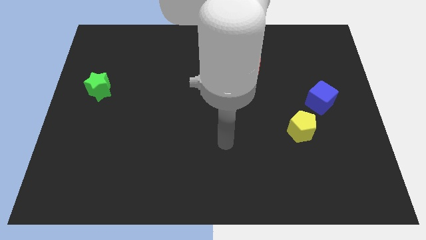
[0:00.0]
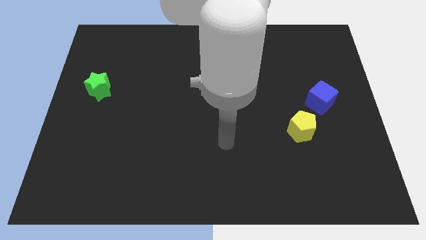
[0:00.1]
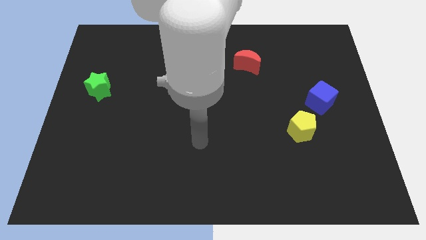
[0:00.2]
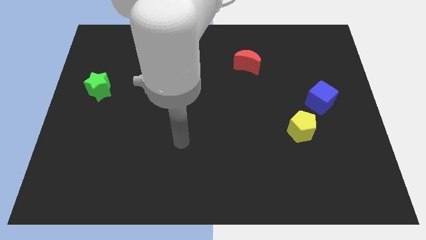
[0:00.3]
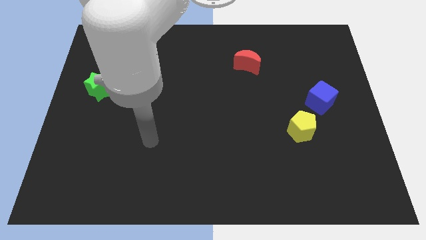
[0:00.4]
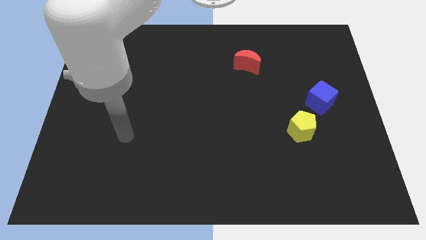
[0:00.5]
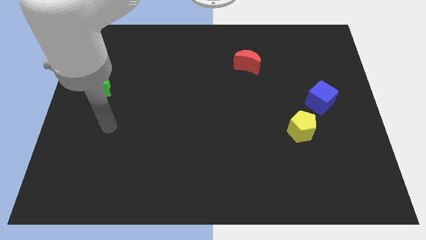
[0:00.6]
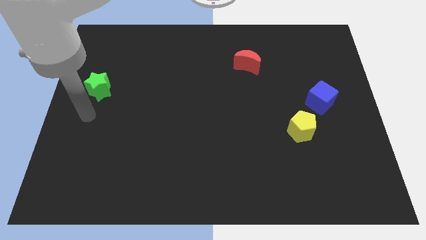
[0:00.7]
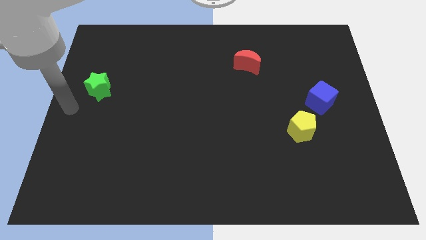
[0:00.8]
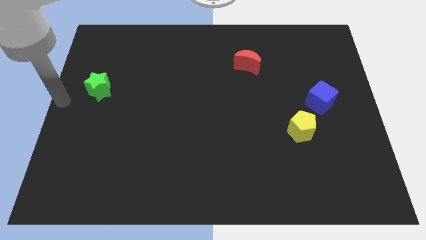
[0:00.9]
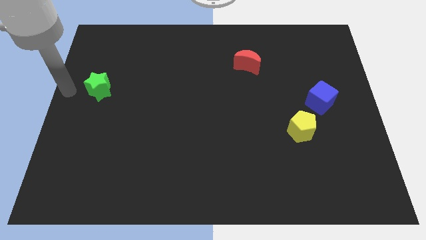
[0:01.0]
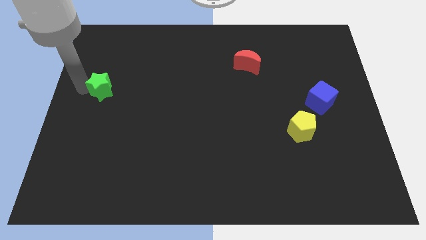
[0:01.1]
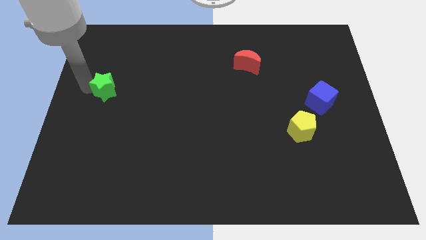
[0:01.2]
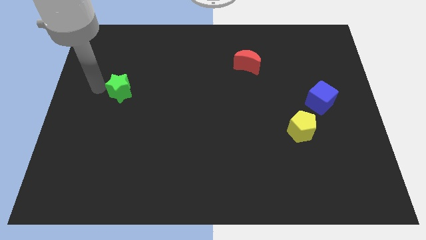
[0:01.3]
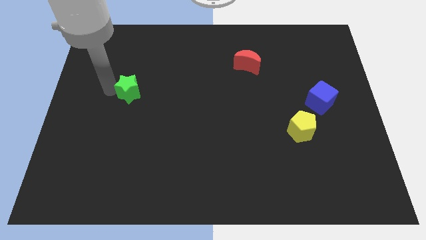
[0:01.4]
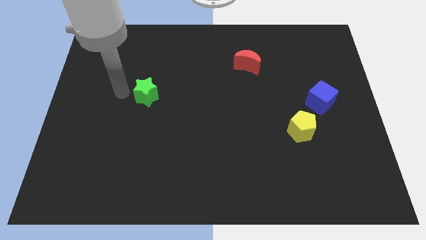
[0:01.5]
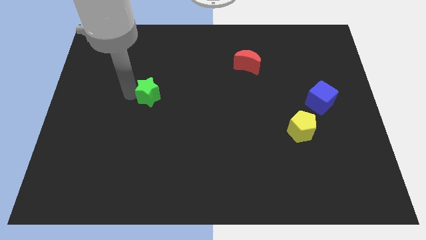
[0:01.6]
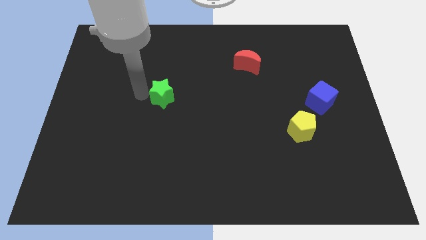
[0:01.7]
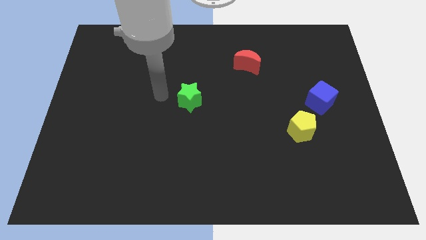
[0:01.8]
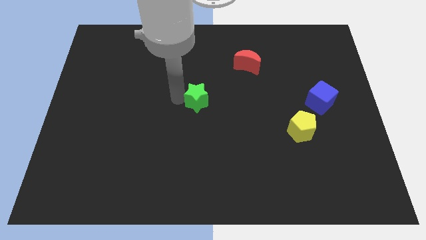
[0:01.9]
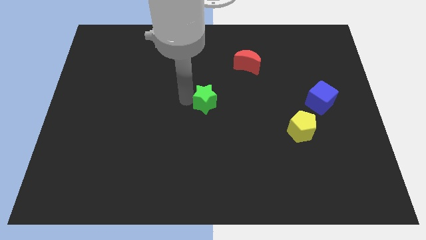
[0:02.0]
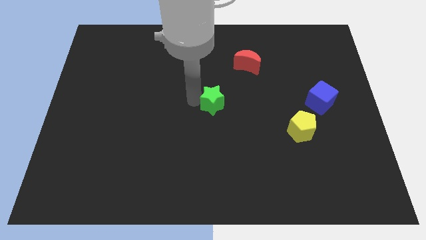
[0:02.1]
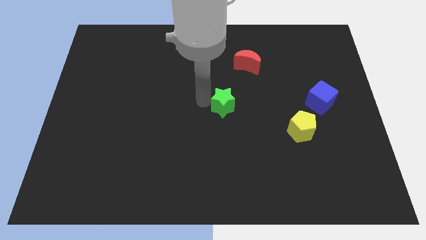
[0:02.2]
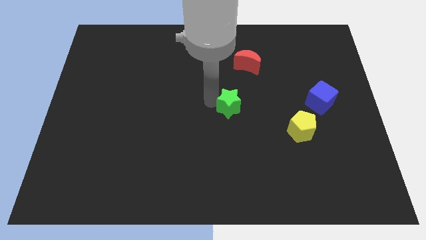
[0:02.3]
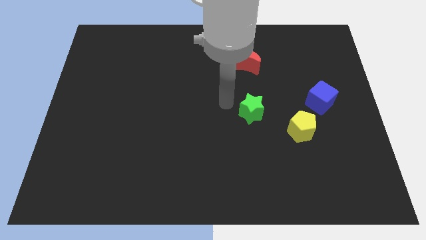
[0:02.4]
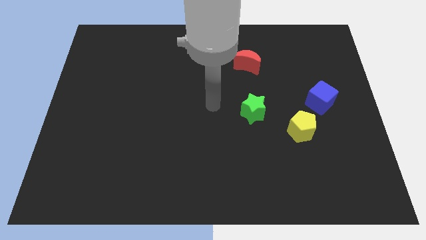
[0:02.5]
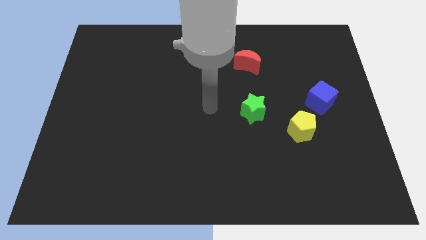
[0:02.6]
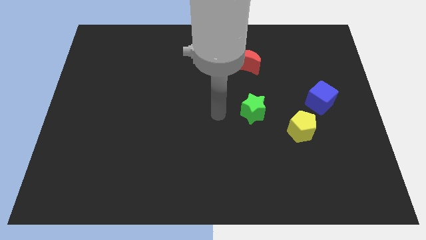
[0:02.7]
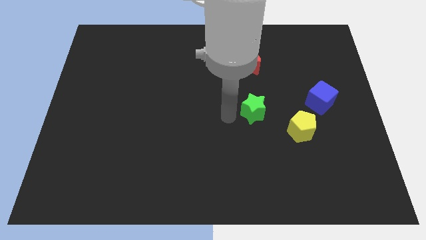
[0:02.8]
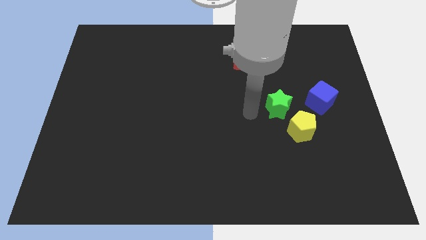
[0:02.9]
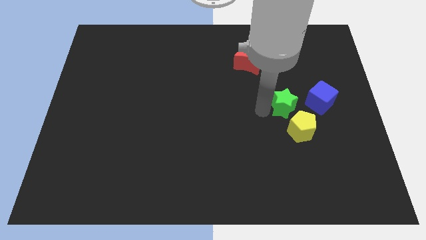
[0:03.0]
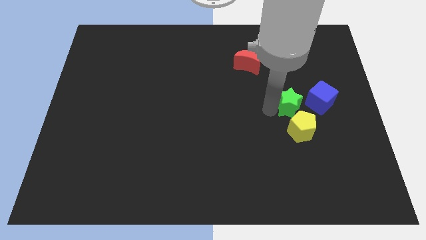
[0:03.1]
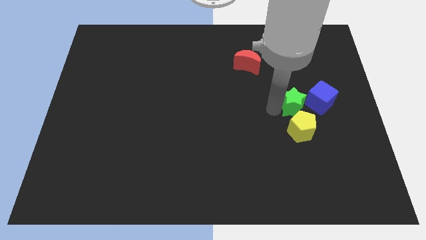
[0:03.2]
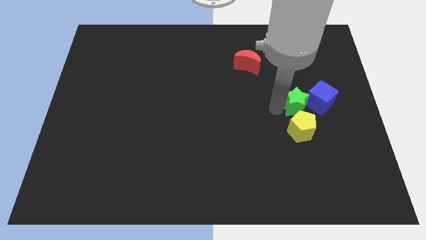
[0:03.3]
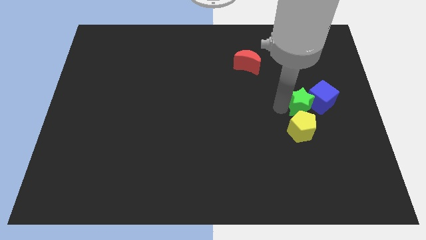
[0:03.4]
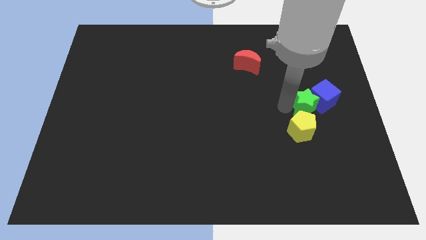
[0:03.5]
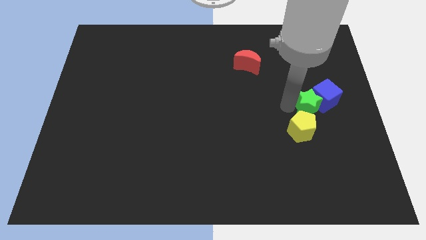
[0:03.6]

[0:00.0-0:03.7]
move the green star close to the blue block

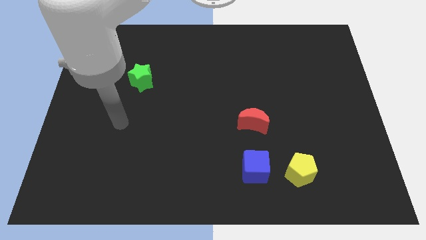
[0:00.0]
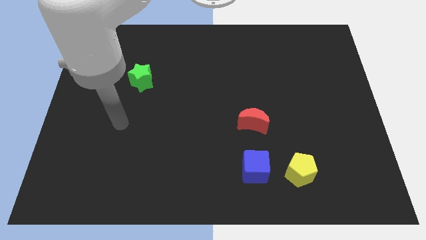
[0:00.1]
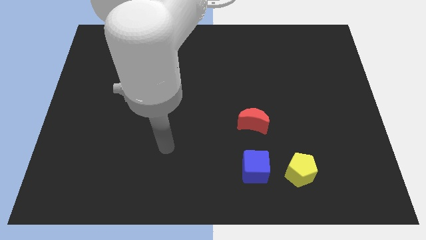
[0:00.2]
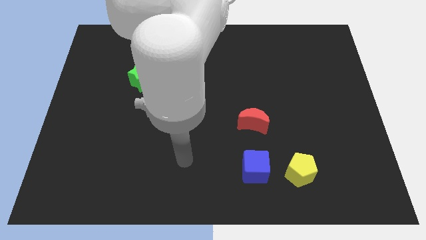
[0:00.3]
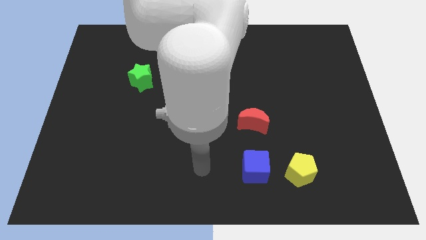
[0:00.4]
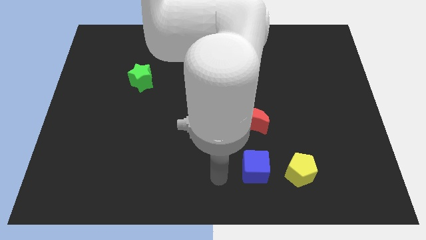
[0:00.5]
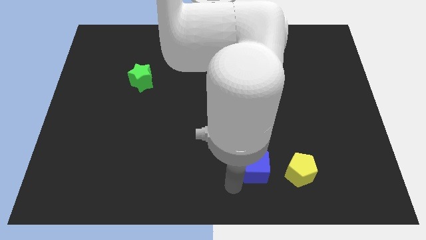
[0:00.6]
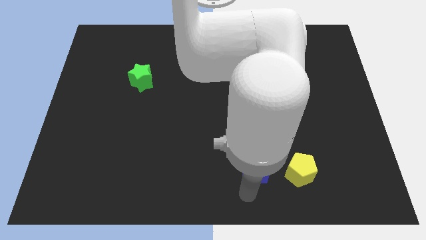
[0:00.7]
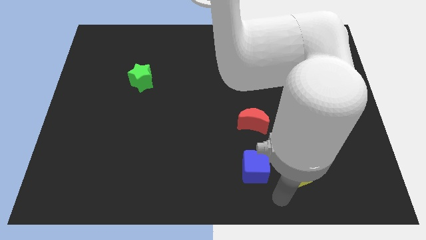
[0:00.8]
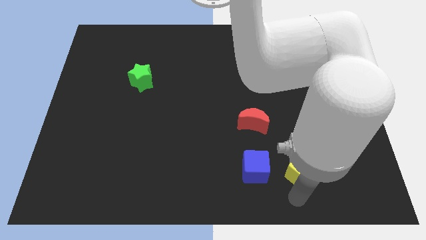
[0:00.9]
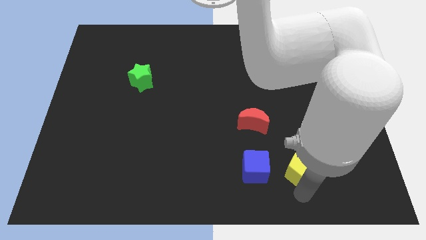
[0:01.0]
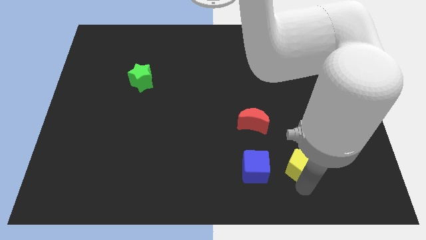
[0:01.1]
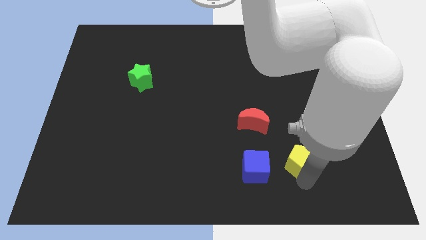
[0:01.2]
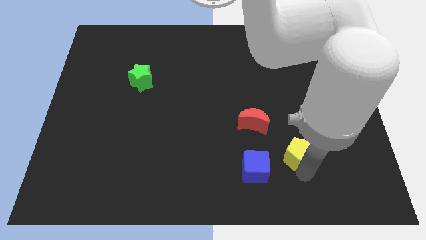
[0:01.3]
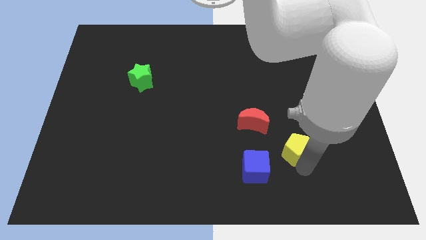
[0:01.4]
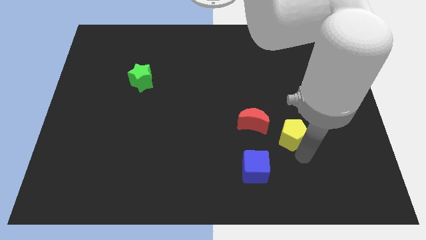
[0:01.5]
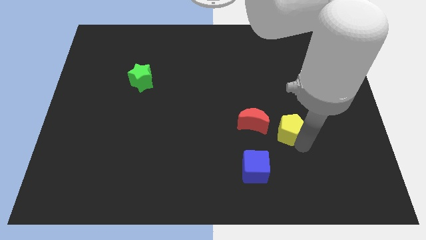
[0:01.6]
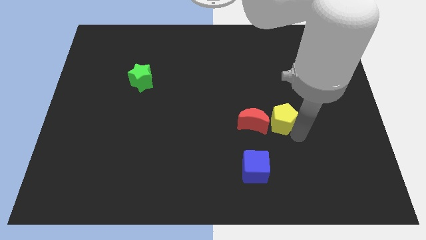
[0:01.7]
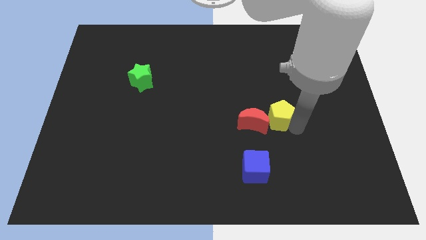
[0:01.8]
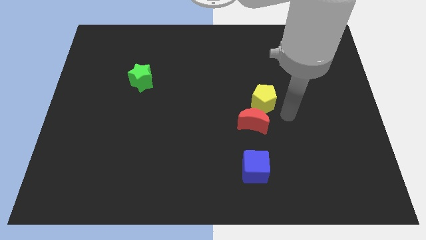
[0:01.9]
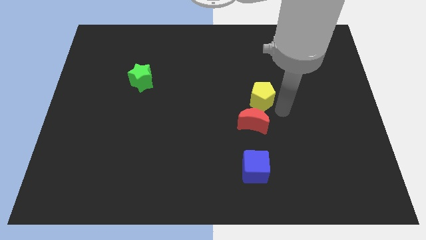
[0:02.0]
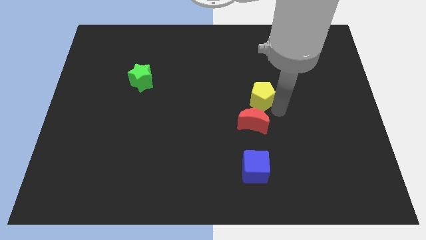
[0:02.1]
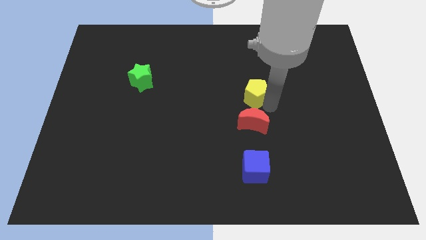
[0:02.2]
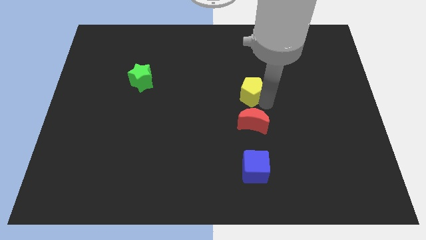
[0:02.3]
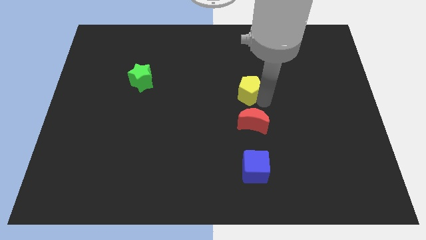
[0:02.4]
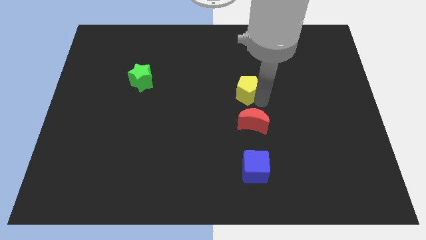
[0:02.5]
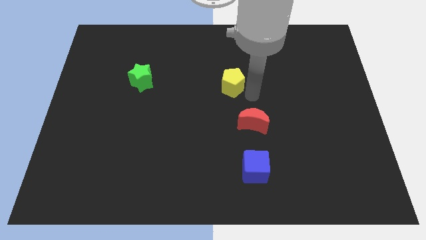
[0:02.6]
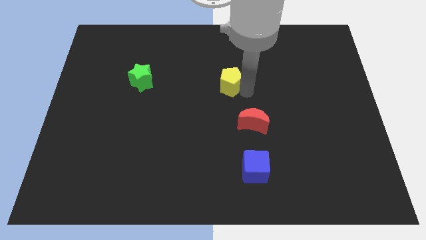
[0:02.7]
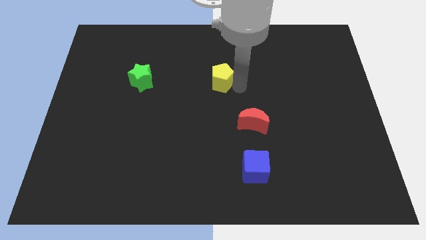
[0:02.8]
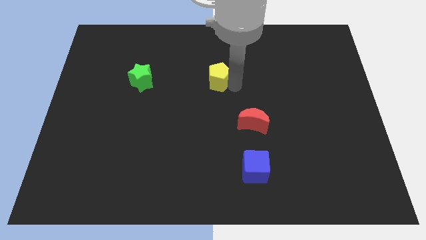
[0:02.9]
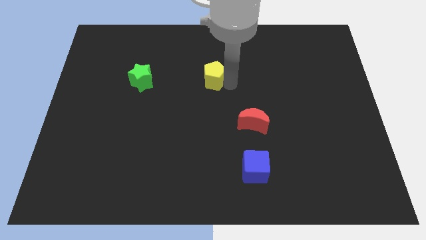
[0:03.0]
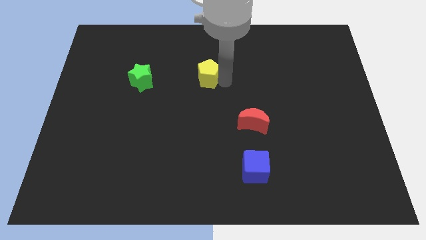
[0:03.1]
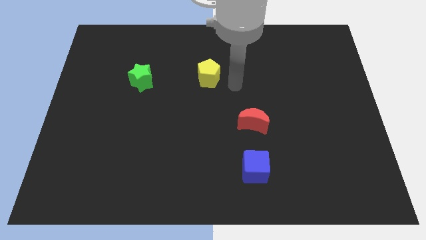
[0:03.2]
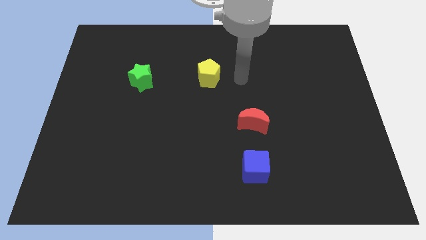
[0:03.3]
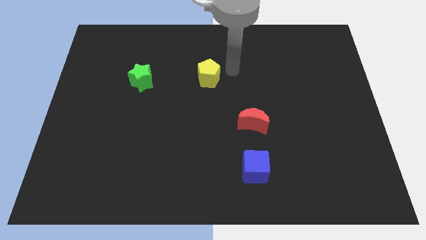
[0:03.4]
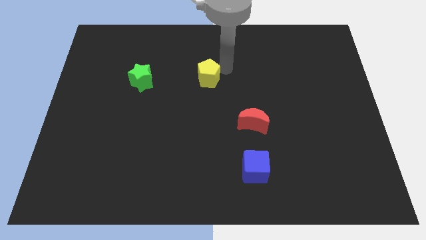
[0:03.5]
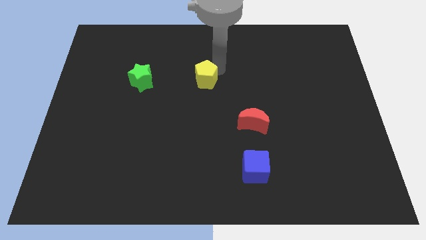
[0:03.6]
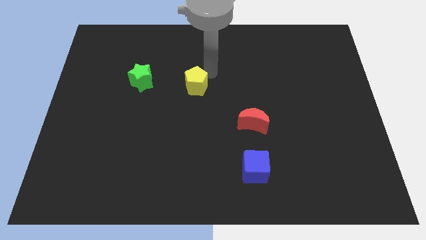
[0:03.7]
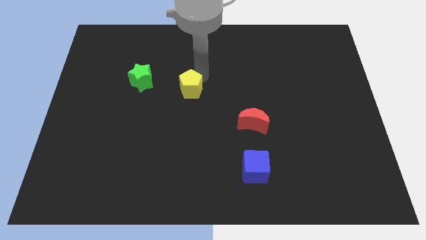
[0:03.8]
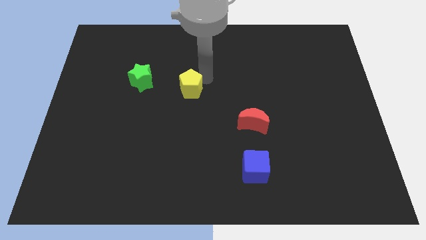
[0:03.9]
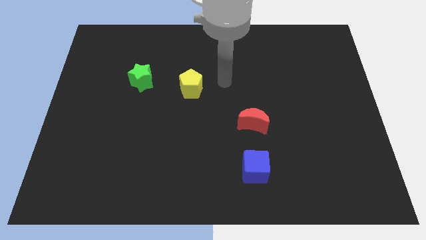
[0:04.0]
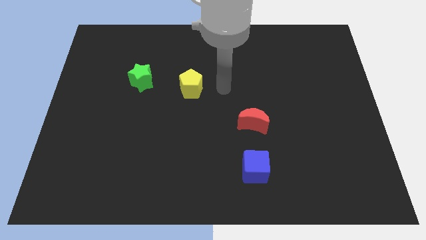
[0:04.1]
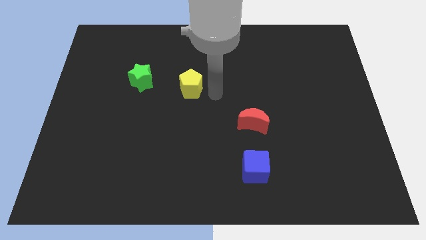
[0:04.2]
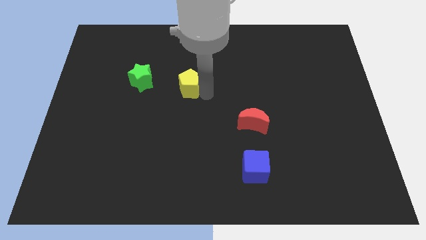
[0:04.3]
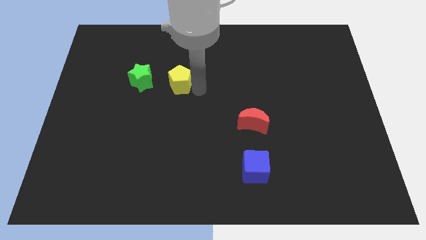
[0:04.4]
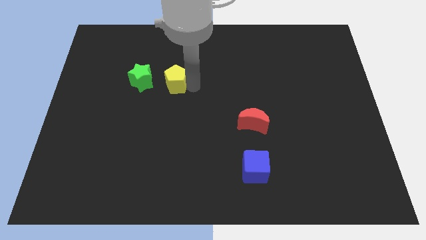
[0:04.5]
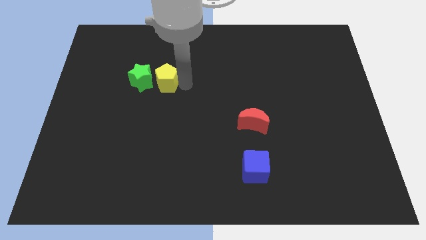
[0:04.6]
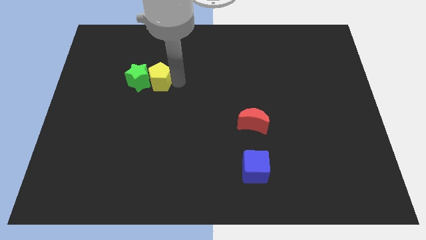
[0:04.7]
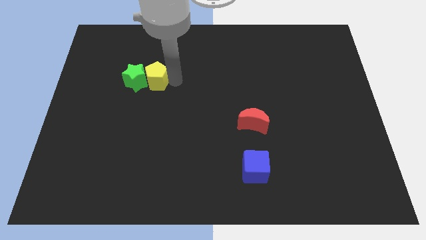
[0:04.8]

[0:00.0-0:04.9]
move the pentagon next to the green block
